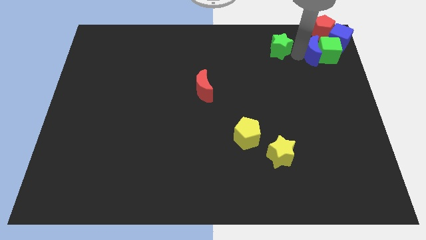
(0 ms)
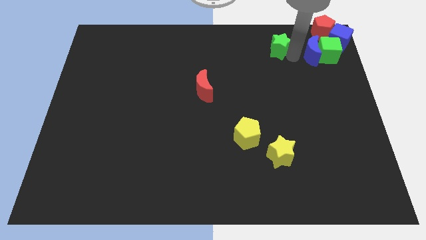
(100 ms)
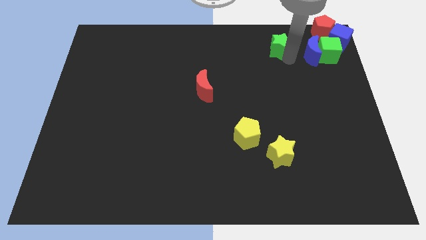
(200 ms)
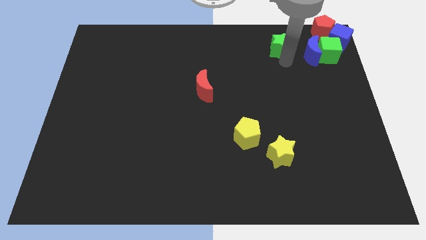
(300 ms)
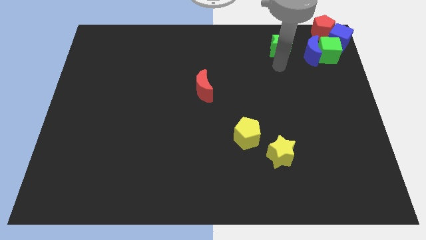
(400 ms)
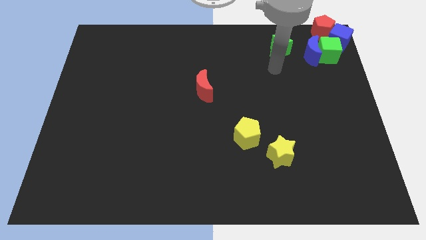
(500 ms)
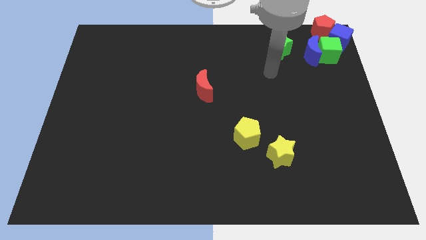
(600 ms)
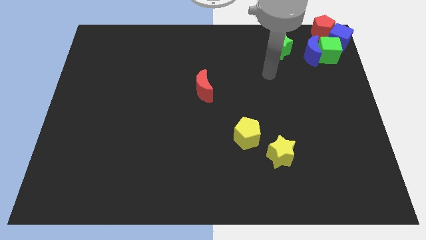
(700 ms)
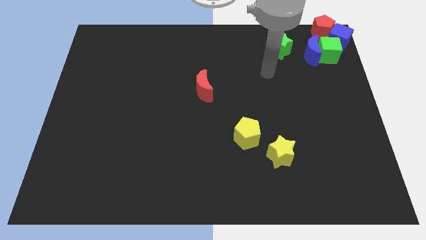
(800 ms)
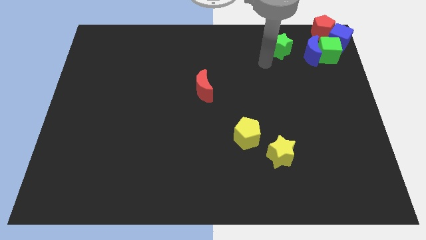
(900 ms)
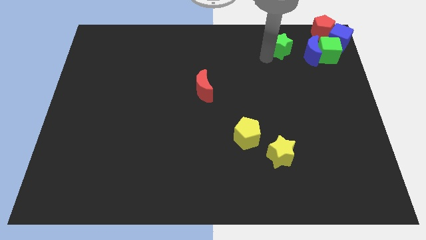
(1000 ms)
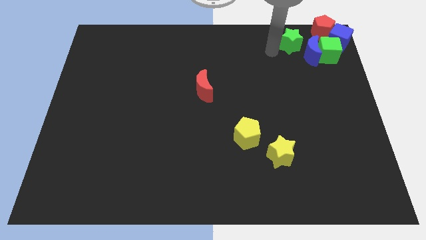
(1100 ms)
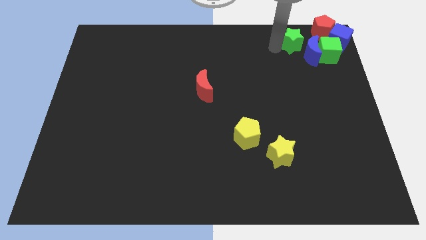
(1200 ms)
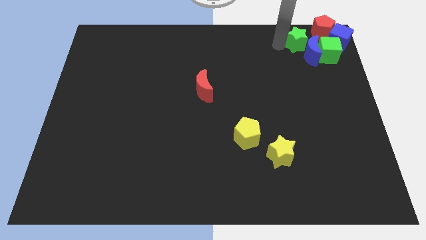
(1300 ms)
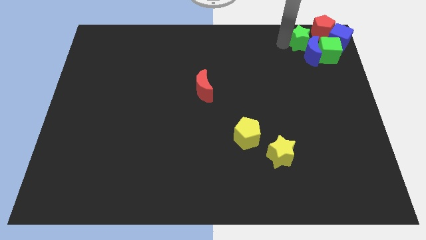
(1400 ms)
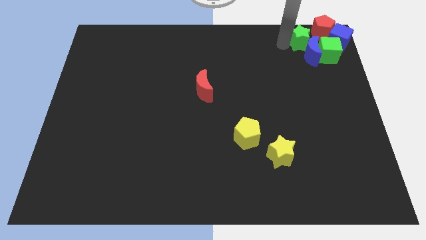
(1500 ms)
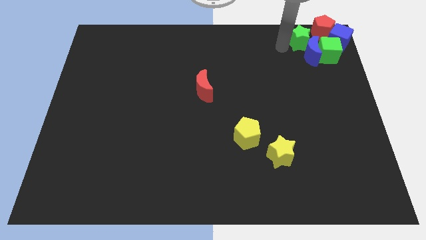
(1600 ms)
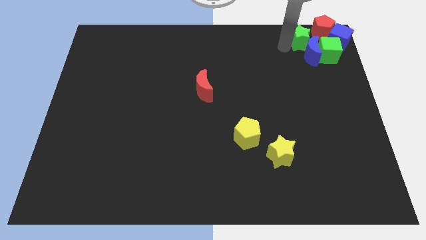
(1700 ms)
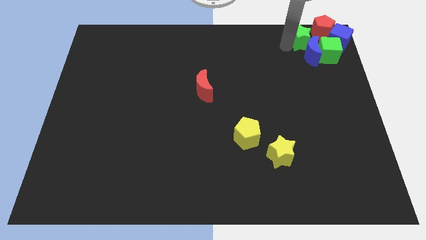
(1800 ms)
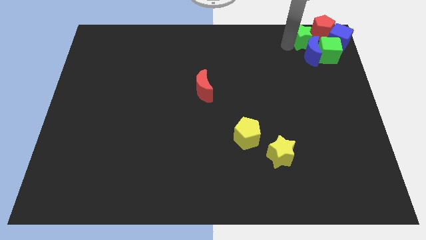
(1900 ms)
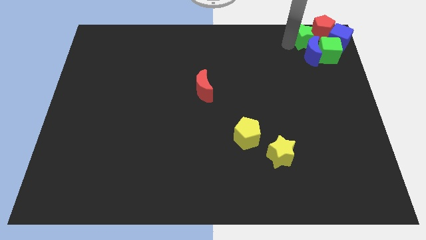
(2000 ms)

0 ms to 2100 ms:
drag the green star close to the group of blocks

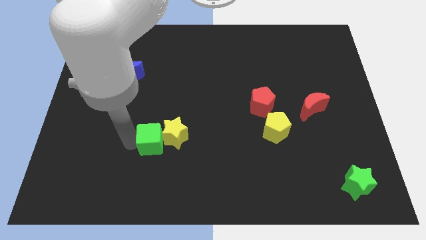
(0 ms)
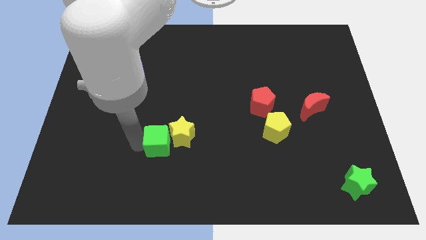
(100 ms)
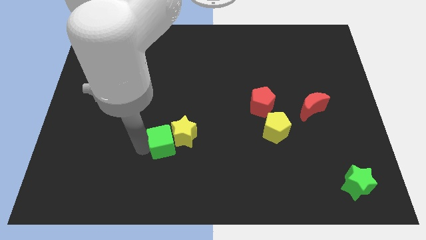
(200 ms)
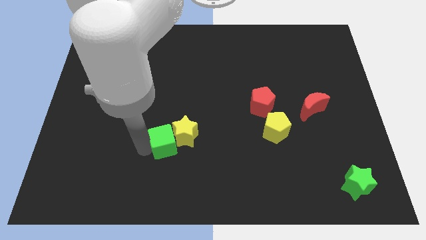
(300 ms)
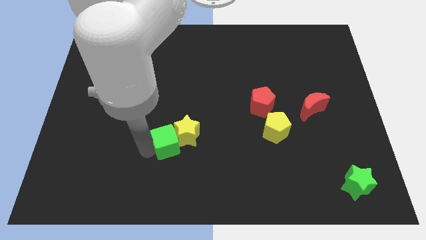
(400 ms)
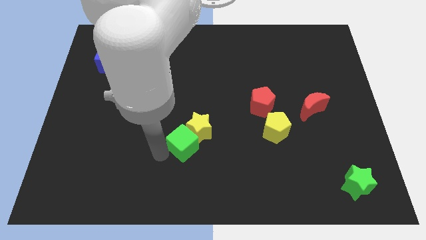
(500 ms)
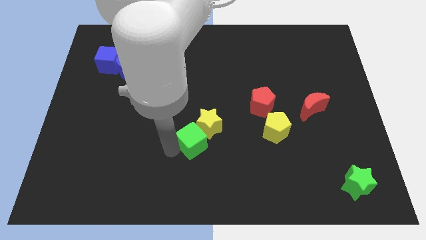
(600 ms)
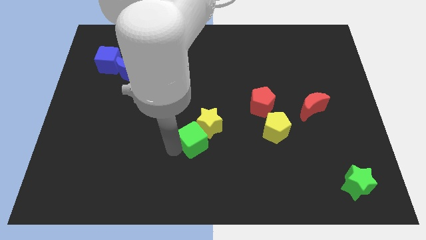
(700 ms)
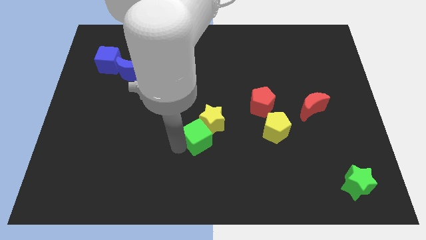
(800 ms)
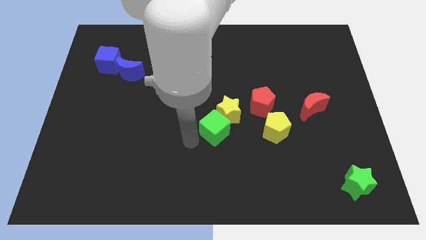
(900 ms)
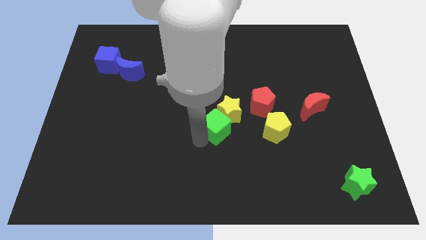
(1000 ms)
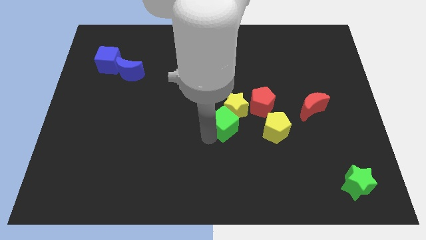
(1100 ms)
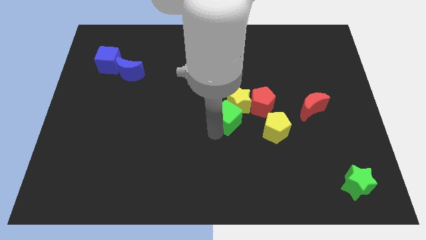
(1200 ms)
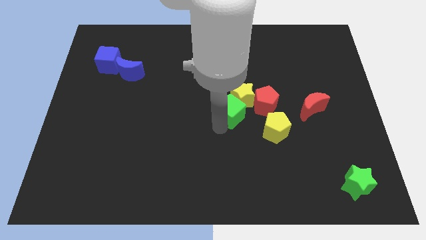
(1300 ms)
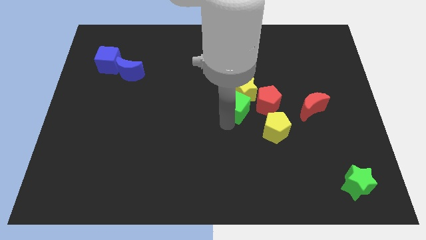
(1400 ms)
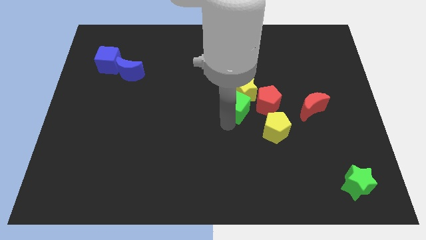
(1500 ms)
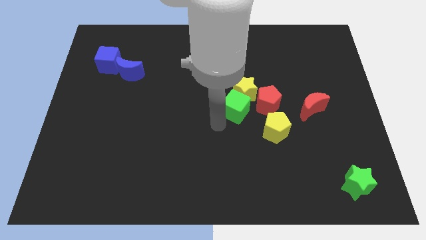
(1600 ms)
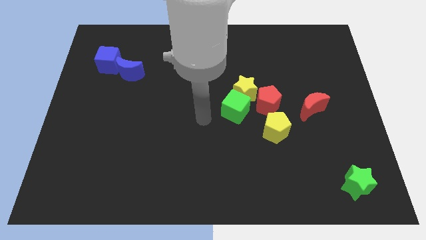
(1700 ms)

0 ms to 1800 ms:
push the green cube along with yellow star close to the red pentagon

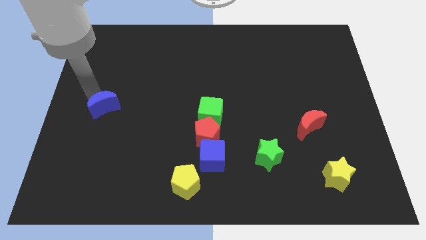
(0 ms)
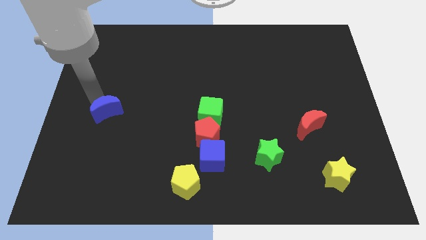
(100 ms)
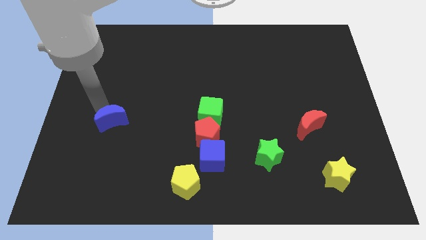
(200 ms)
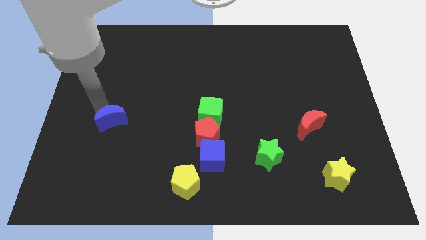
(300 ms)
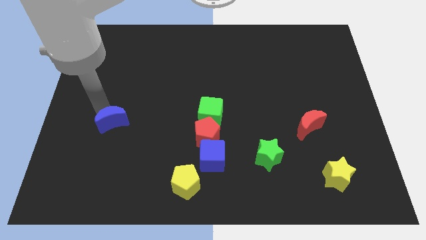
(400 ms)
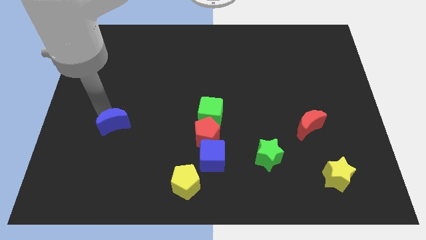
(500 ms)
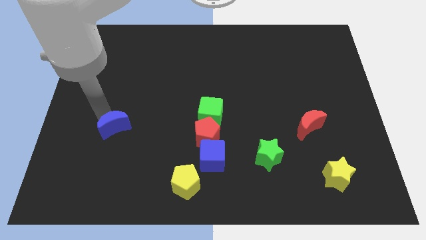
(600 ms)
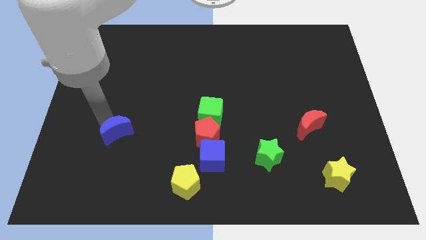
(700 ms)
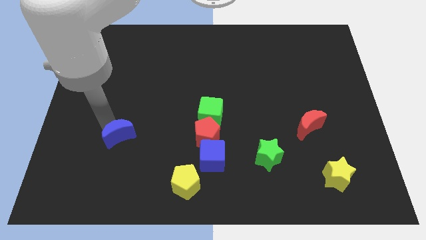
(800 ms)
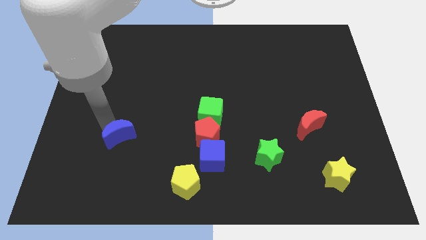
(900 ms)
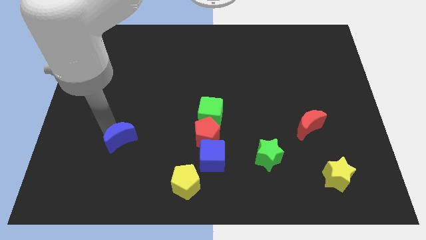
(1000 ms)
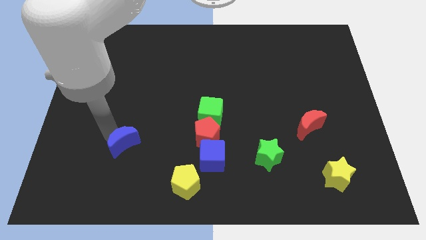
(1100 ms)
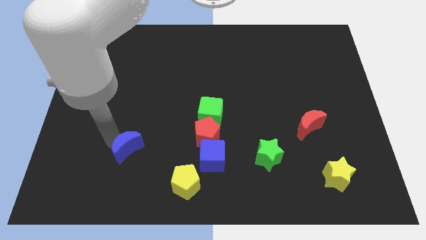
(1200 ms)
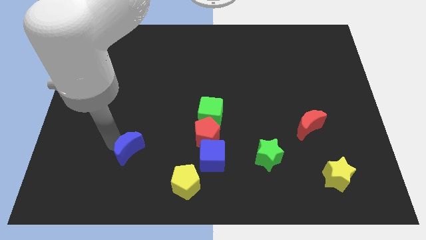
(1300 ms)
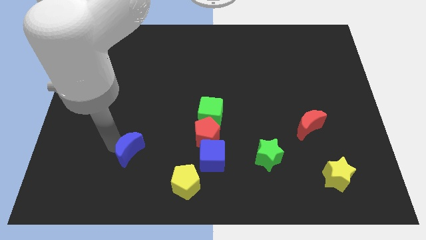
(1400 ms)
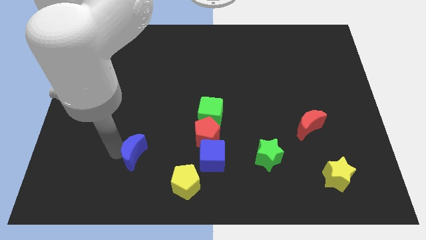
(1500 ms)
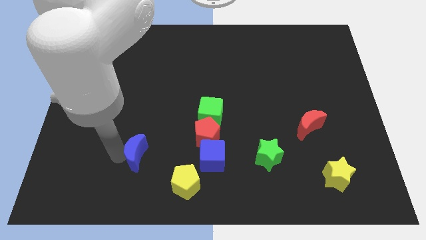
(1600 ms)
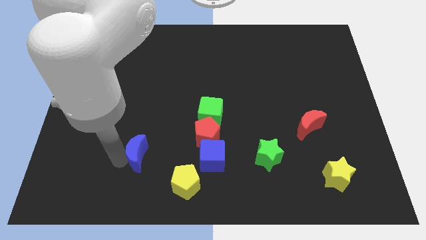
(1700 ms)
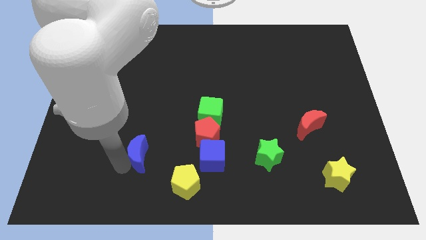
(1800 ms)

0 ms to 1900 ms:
drag blue moon horizontally to the left side of the blue cube

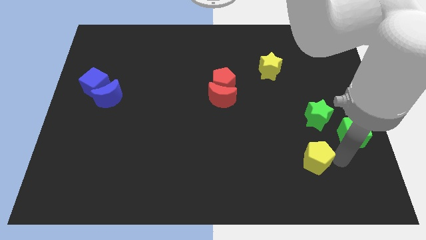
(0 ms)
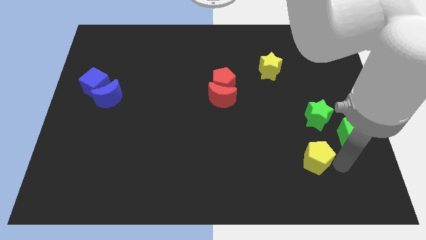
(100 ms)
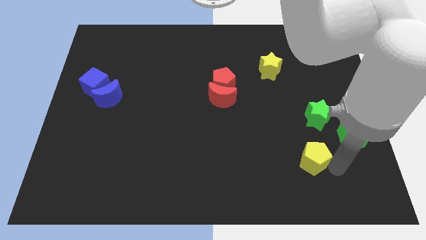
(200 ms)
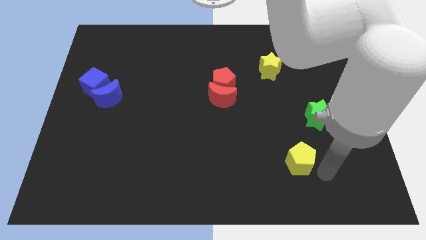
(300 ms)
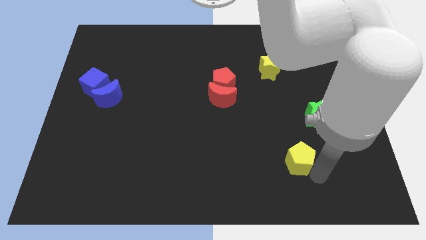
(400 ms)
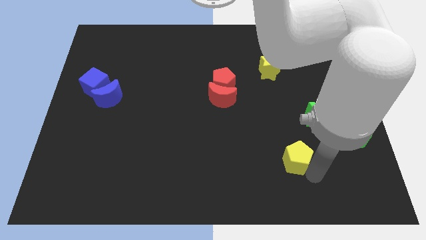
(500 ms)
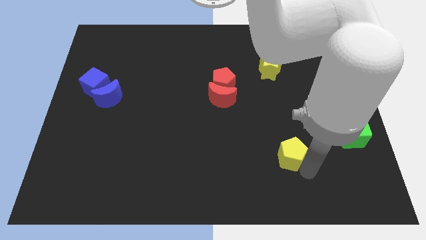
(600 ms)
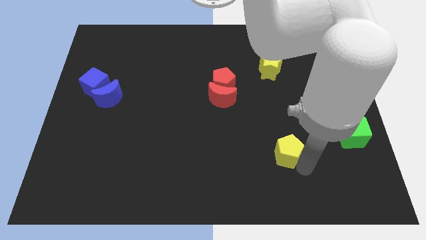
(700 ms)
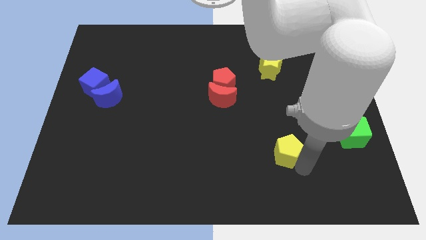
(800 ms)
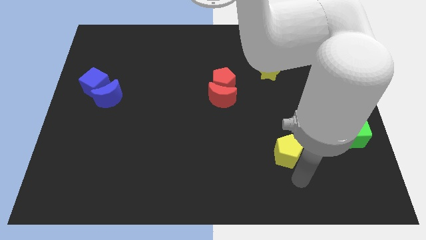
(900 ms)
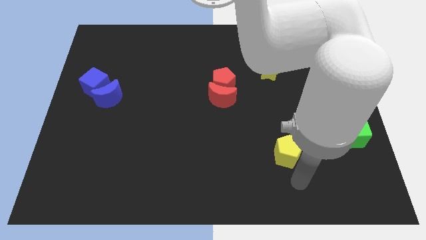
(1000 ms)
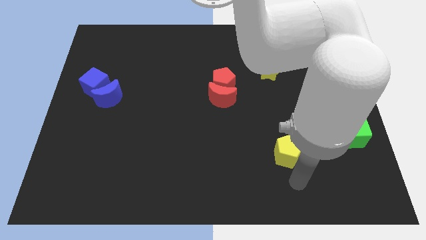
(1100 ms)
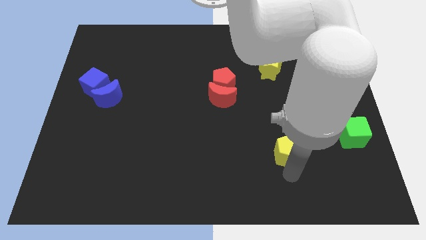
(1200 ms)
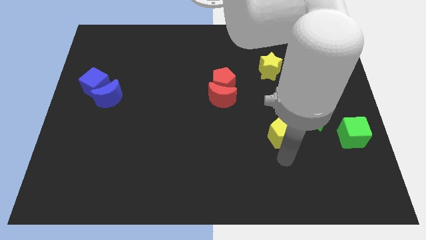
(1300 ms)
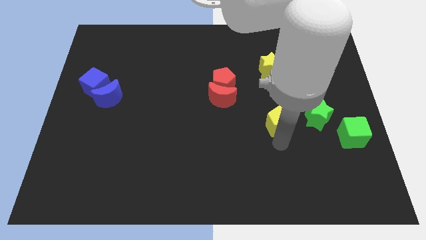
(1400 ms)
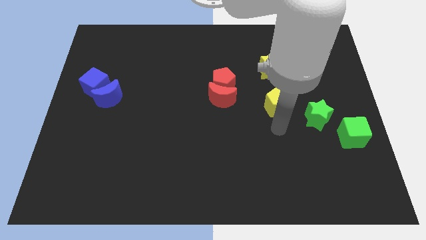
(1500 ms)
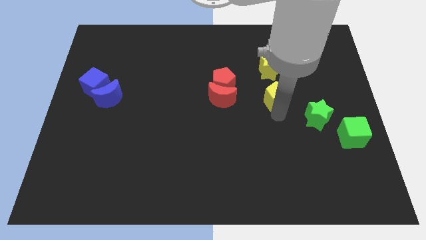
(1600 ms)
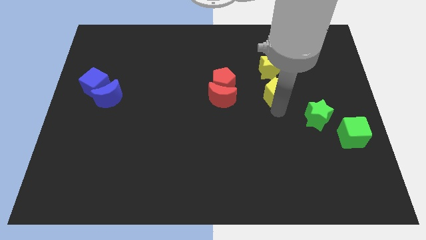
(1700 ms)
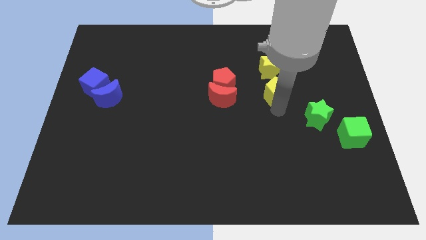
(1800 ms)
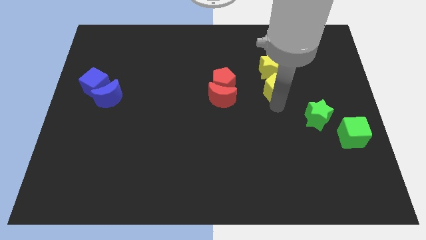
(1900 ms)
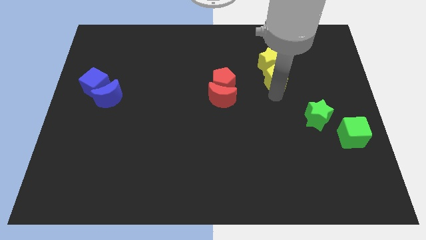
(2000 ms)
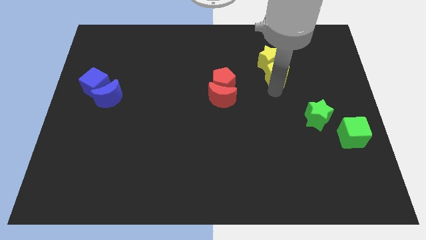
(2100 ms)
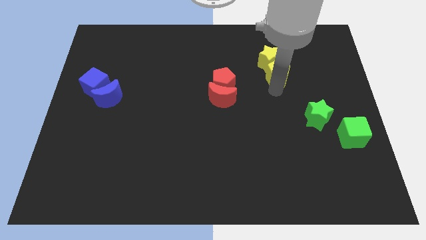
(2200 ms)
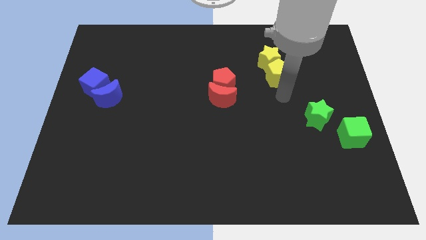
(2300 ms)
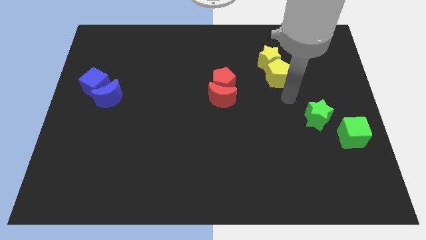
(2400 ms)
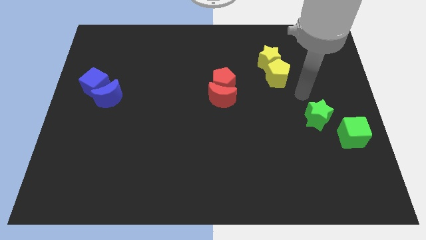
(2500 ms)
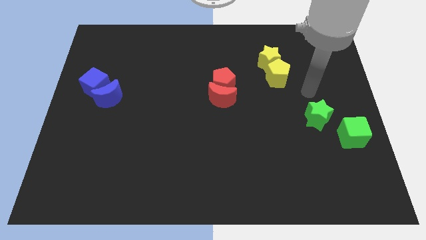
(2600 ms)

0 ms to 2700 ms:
push the yellow pentagon into the yellow star

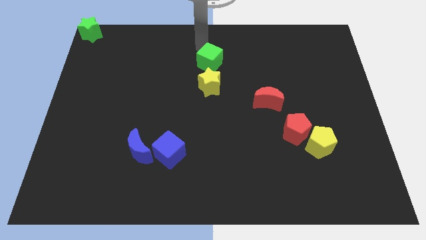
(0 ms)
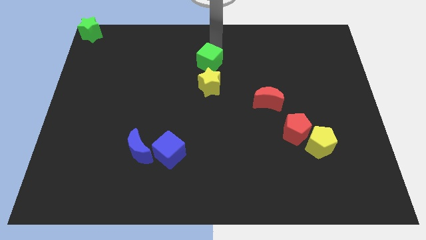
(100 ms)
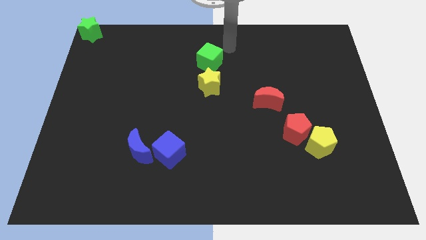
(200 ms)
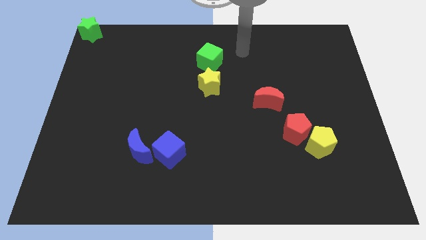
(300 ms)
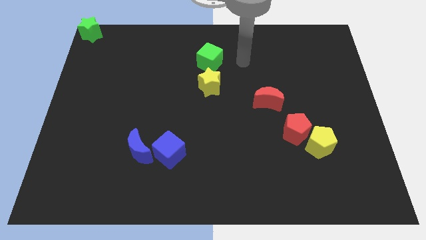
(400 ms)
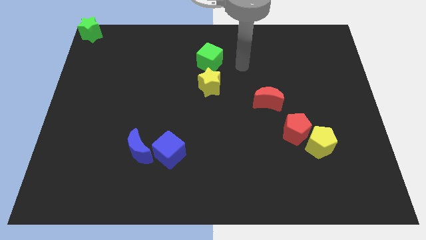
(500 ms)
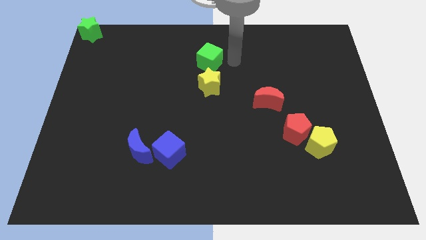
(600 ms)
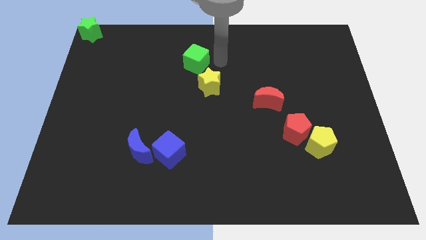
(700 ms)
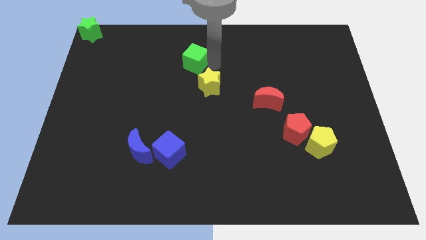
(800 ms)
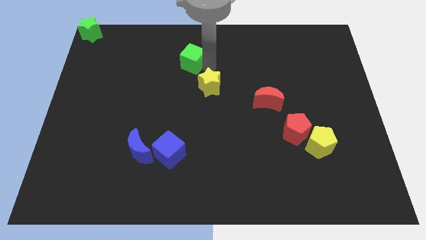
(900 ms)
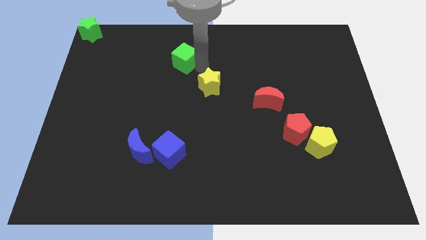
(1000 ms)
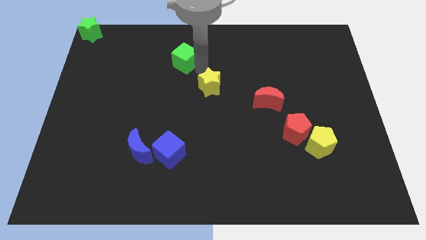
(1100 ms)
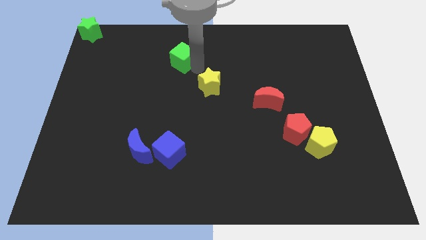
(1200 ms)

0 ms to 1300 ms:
separate the green cube with the yellow star
